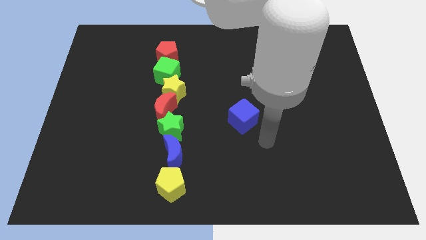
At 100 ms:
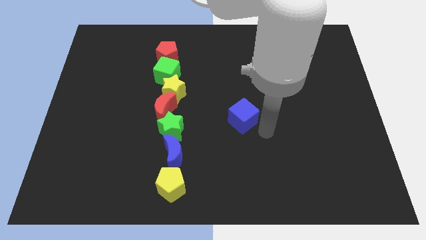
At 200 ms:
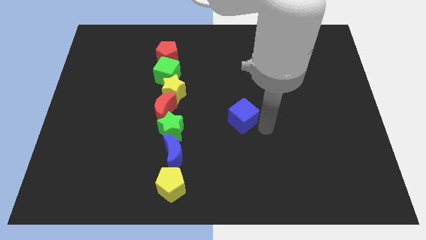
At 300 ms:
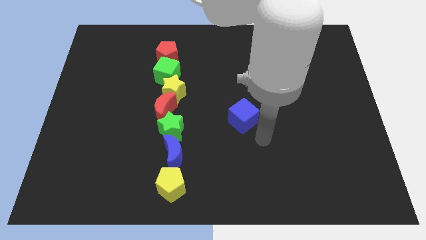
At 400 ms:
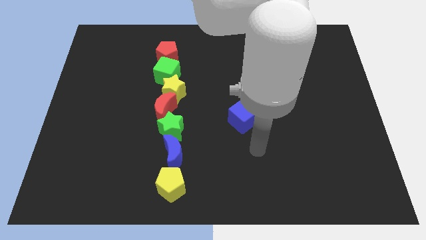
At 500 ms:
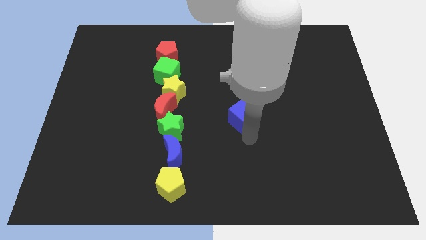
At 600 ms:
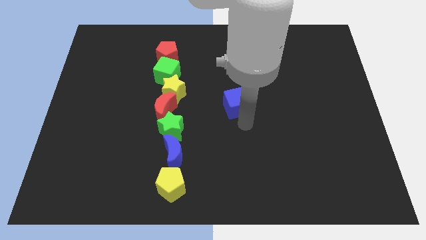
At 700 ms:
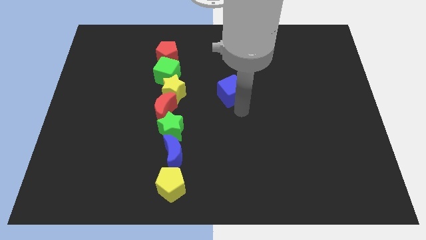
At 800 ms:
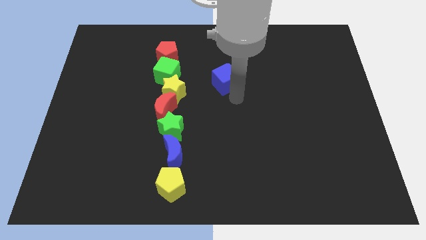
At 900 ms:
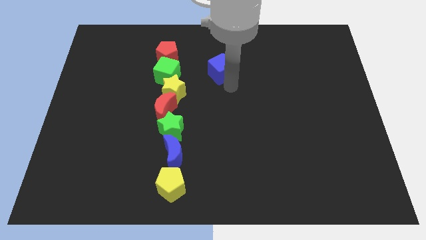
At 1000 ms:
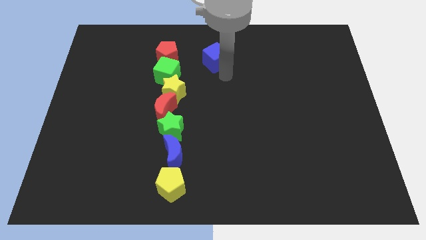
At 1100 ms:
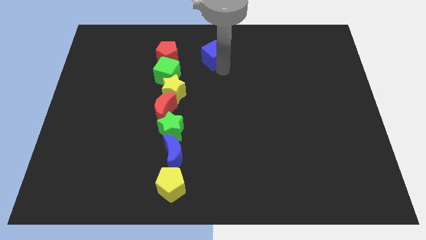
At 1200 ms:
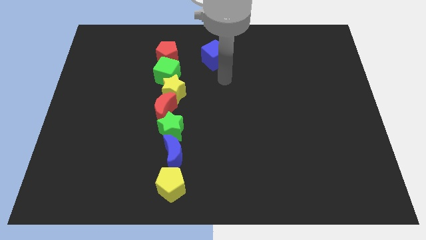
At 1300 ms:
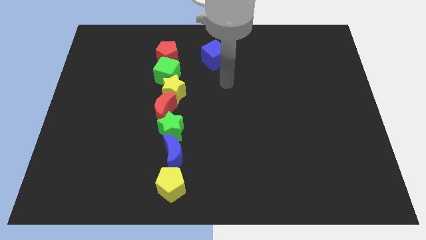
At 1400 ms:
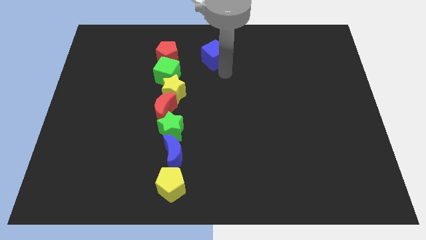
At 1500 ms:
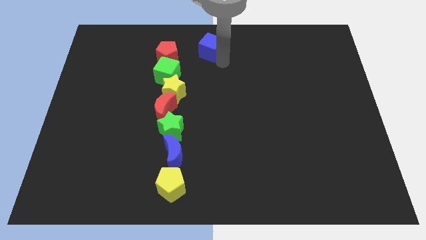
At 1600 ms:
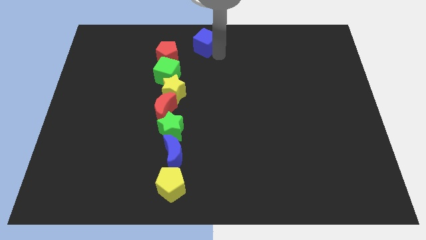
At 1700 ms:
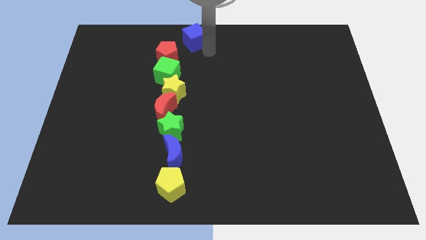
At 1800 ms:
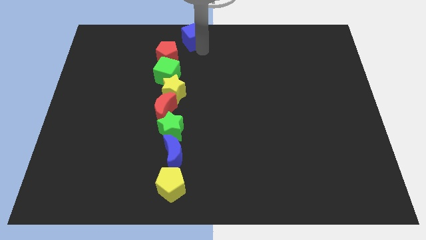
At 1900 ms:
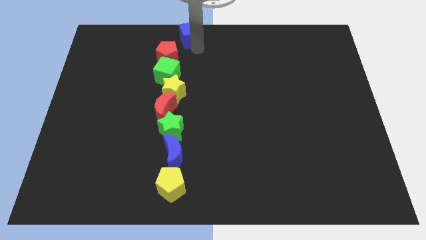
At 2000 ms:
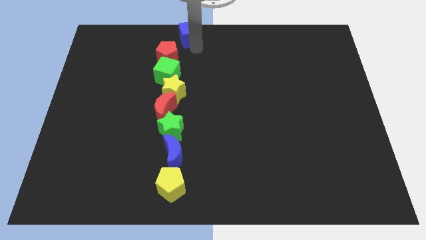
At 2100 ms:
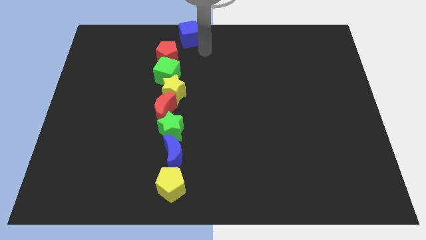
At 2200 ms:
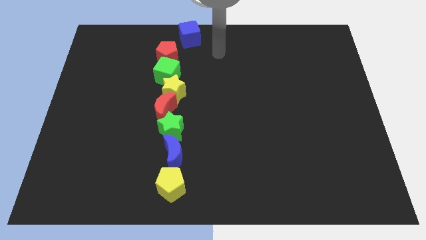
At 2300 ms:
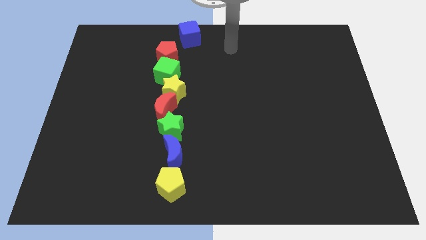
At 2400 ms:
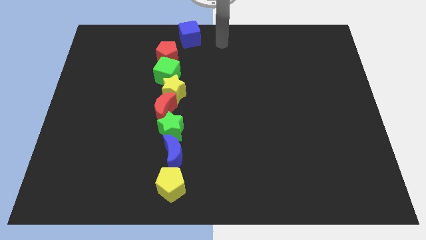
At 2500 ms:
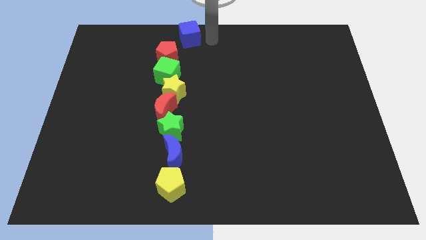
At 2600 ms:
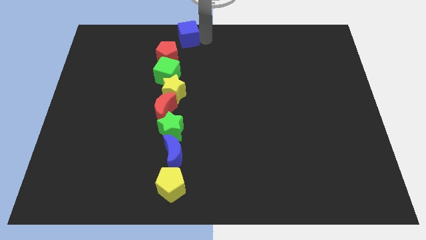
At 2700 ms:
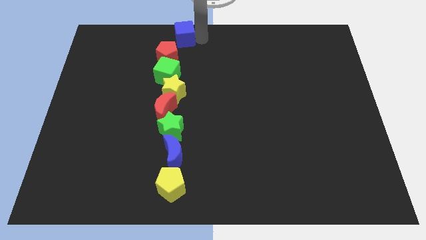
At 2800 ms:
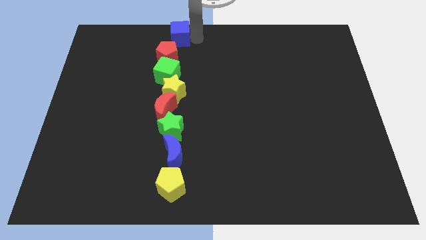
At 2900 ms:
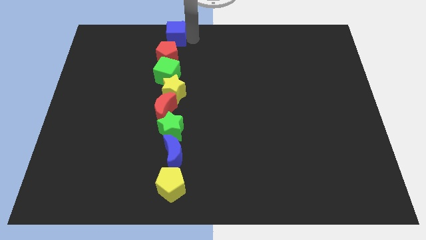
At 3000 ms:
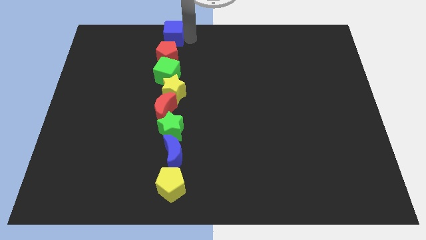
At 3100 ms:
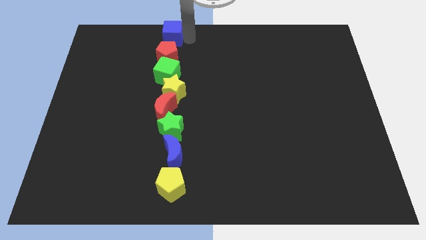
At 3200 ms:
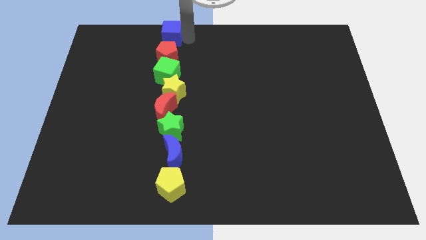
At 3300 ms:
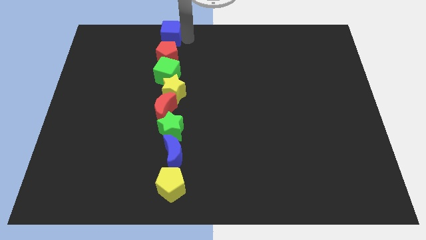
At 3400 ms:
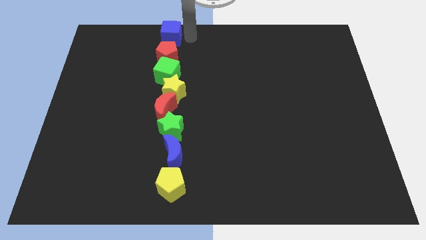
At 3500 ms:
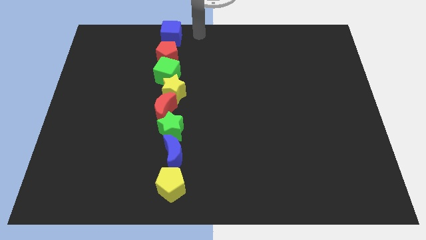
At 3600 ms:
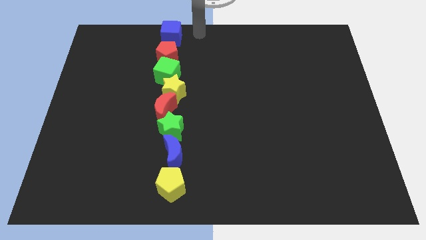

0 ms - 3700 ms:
move the blue cube to the top of the red pentagon

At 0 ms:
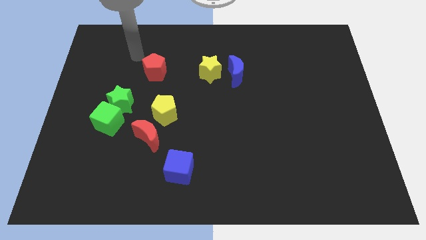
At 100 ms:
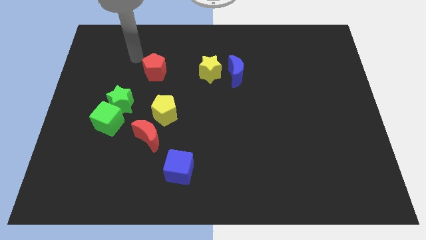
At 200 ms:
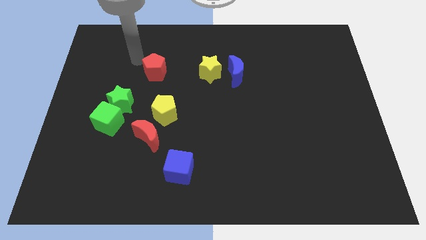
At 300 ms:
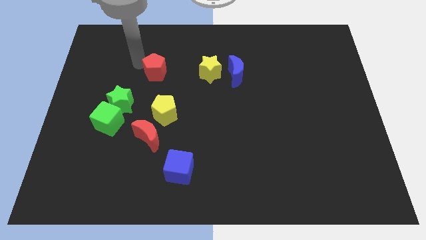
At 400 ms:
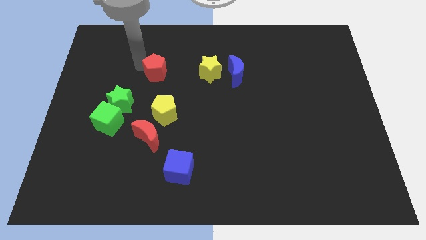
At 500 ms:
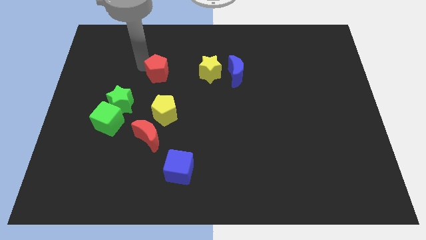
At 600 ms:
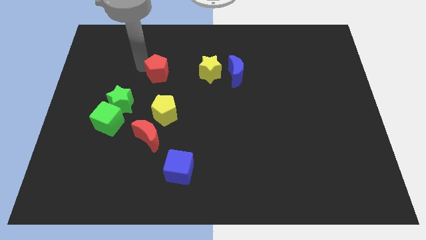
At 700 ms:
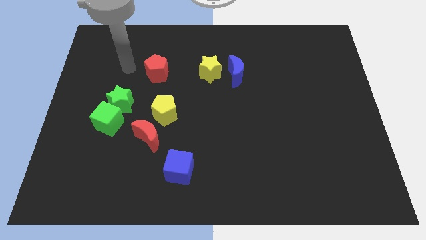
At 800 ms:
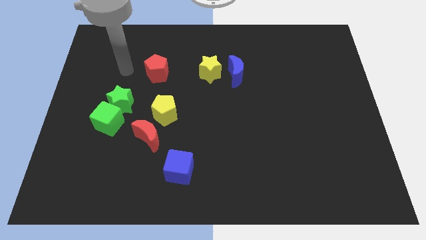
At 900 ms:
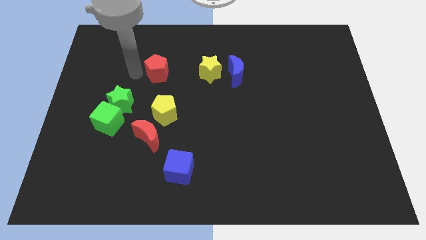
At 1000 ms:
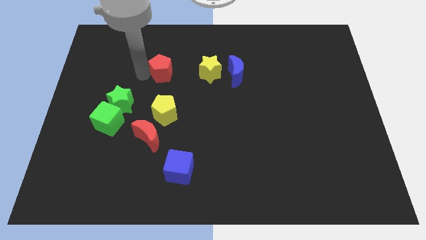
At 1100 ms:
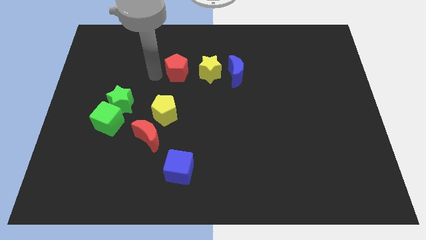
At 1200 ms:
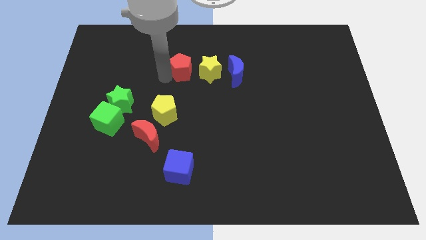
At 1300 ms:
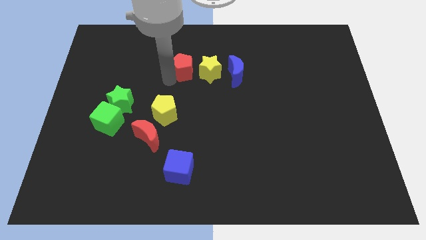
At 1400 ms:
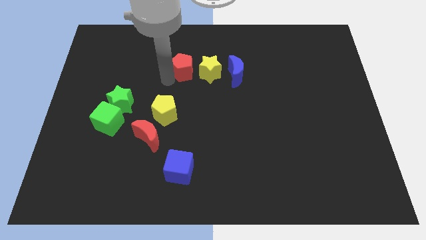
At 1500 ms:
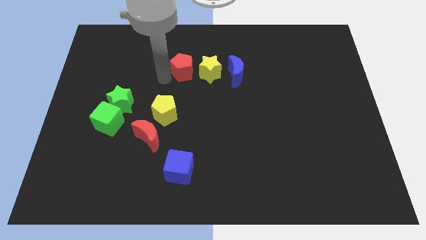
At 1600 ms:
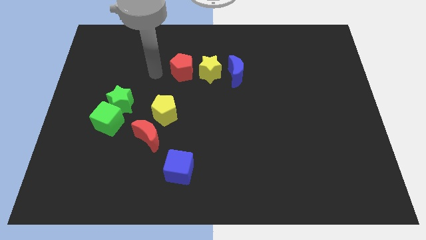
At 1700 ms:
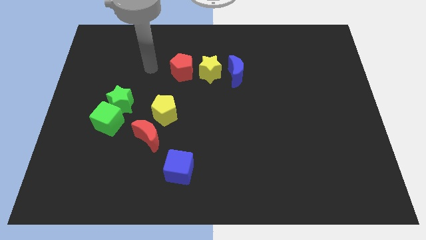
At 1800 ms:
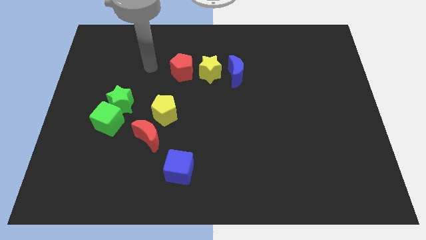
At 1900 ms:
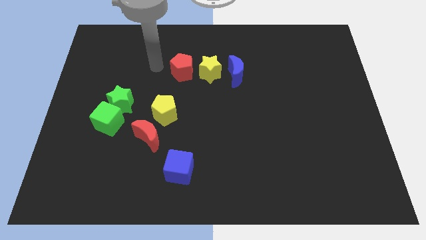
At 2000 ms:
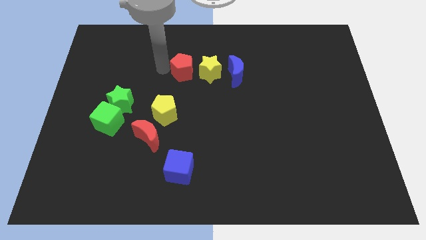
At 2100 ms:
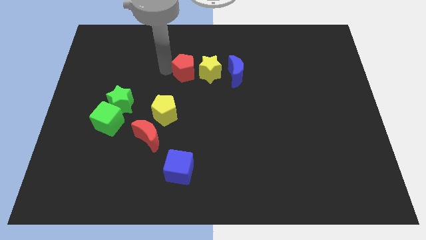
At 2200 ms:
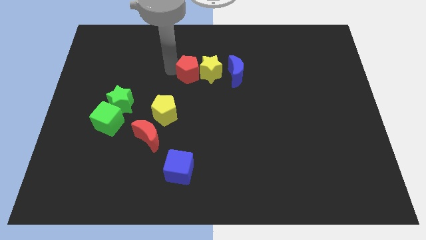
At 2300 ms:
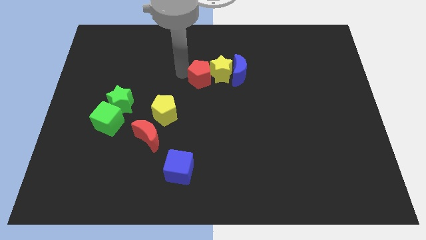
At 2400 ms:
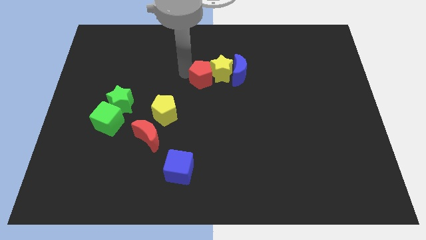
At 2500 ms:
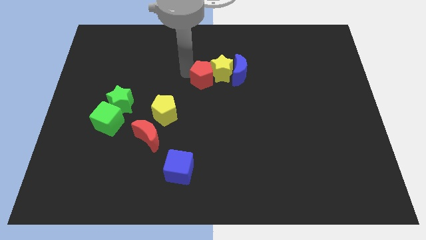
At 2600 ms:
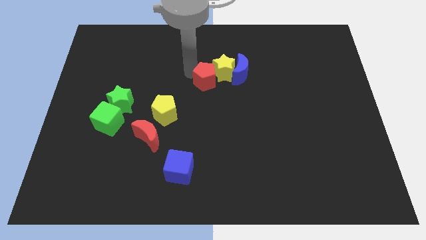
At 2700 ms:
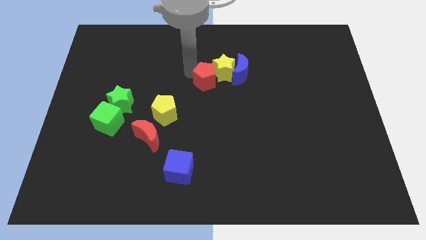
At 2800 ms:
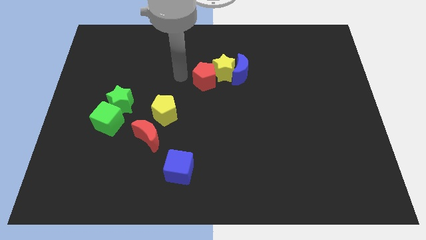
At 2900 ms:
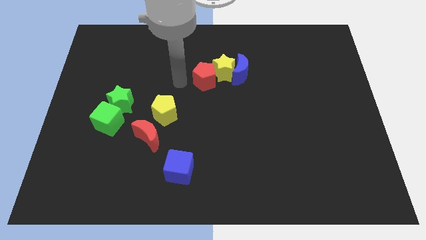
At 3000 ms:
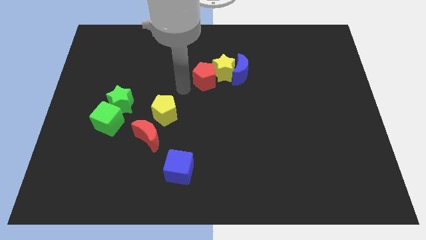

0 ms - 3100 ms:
push the red pentagon into the yellow star

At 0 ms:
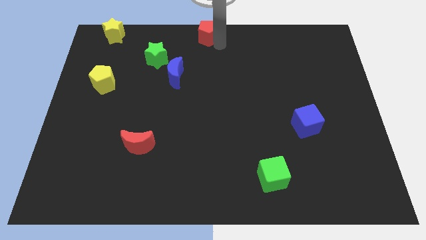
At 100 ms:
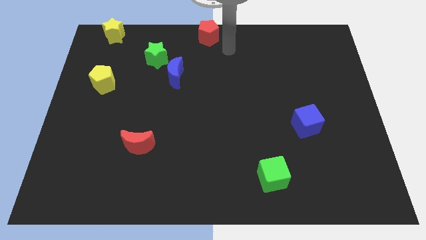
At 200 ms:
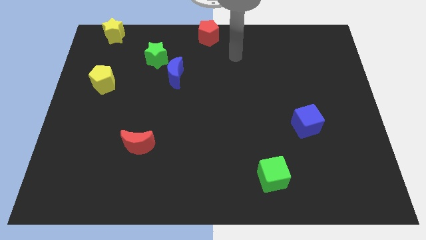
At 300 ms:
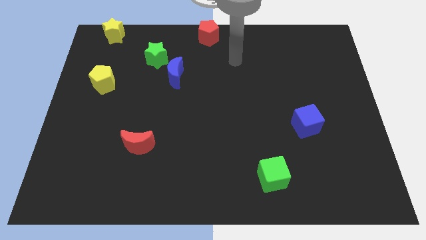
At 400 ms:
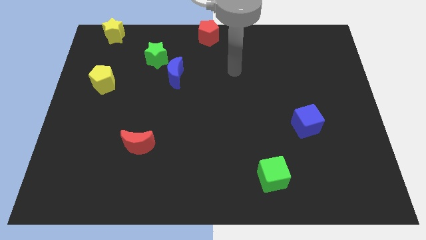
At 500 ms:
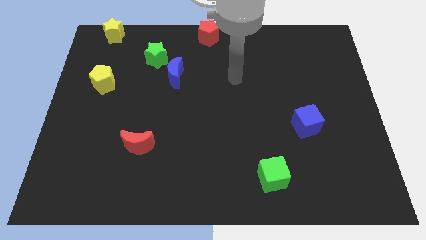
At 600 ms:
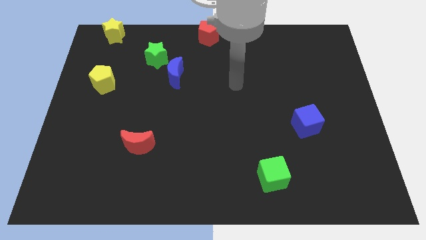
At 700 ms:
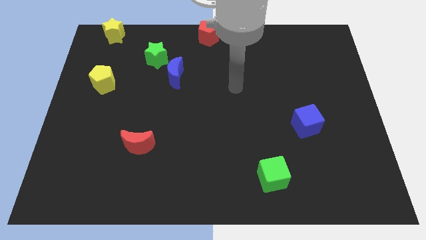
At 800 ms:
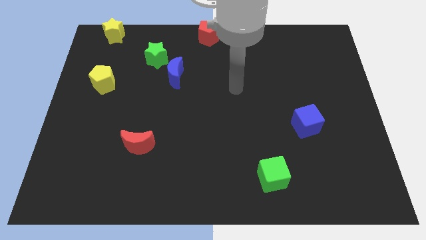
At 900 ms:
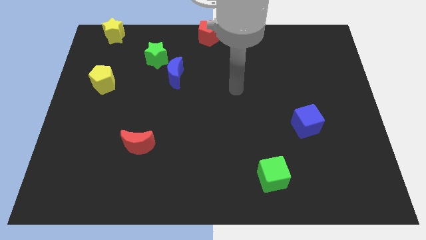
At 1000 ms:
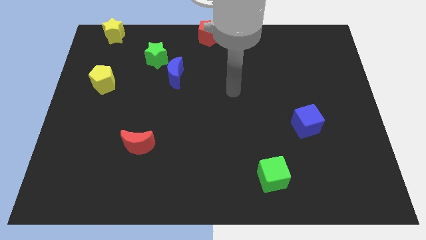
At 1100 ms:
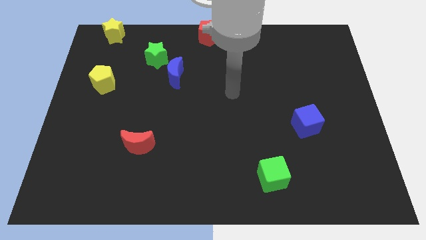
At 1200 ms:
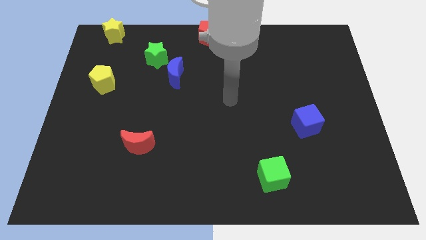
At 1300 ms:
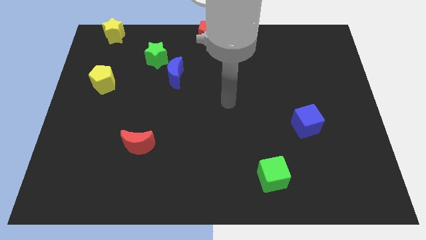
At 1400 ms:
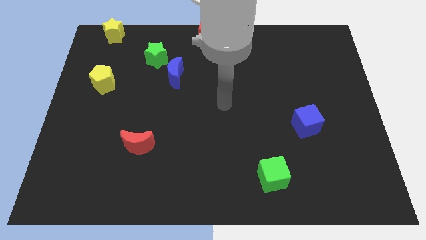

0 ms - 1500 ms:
move your arm away from the red pentagon

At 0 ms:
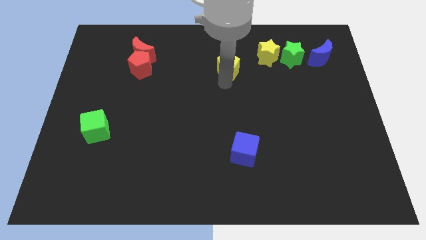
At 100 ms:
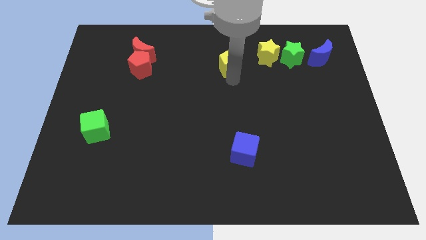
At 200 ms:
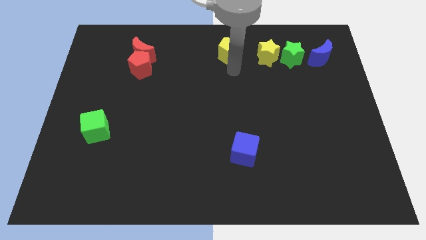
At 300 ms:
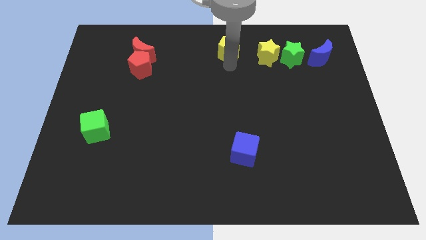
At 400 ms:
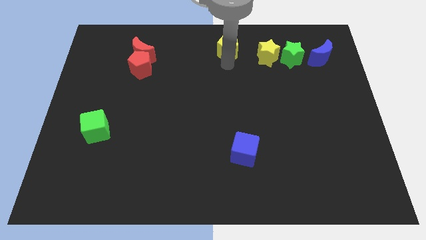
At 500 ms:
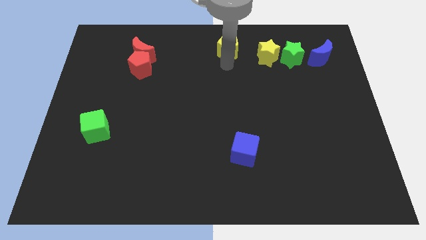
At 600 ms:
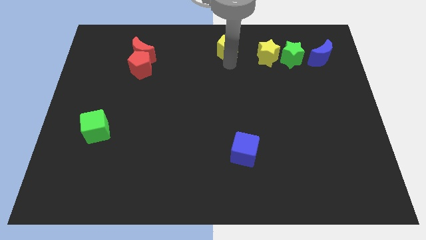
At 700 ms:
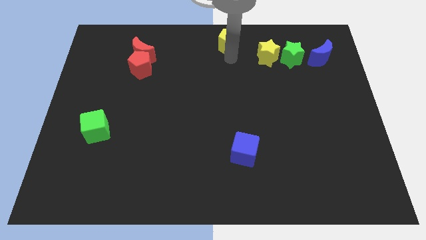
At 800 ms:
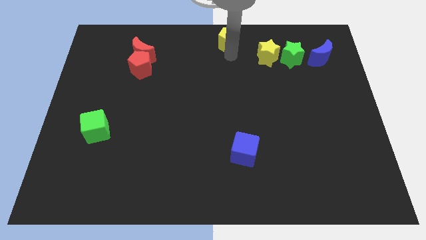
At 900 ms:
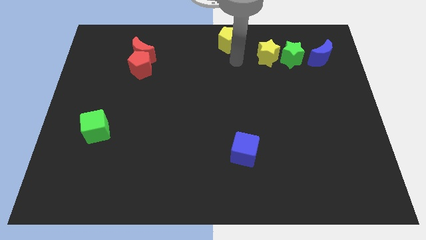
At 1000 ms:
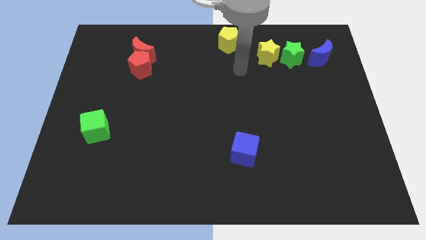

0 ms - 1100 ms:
push yellow pentagon to the top center of the board
